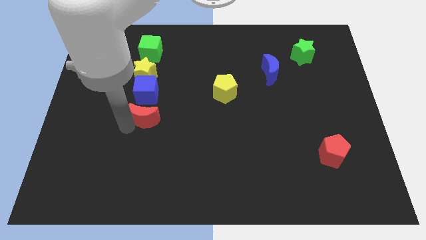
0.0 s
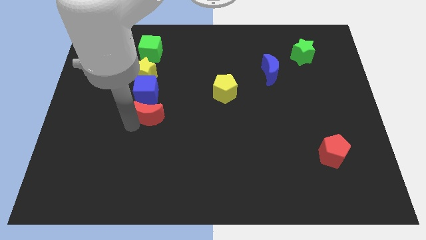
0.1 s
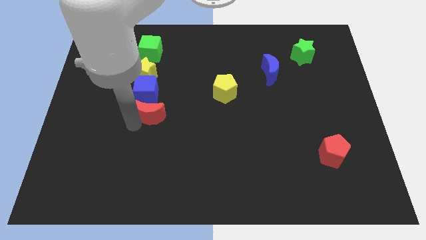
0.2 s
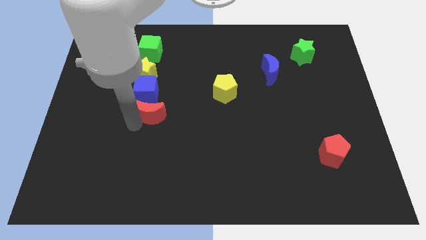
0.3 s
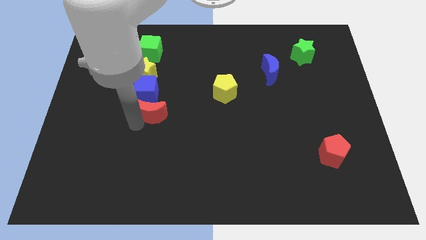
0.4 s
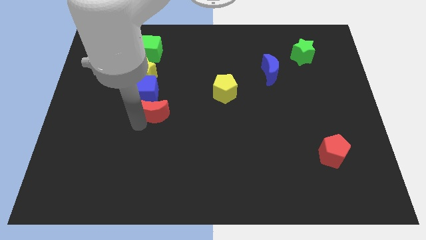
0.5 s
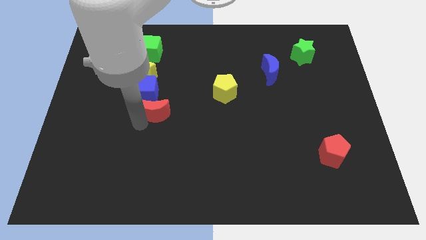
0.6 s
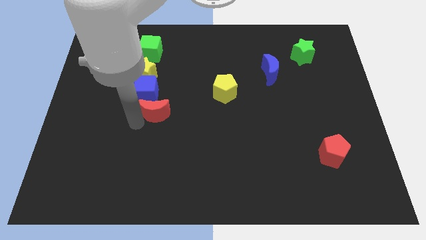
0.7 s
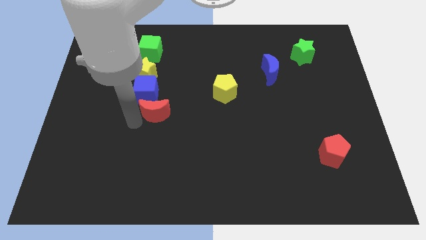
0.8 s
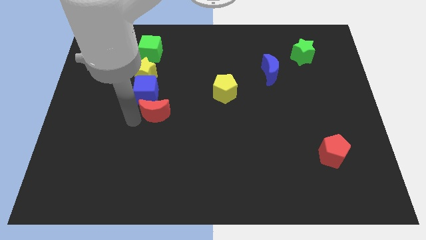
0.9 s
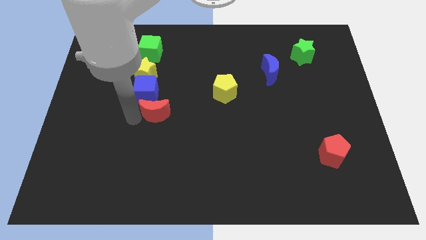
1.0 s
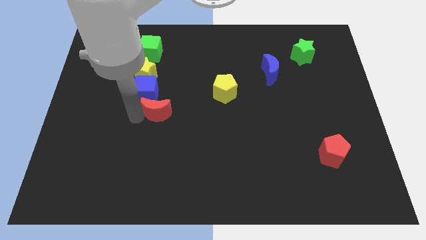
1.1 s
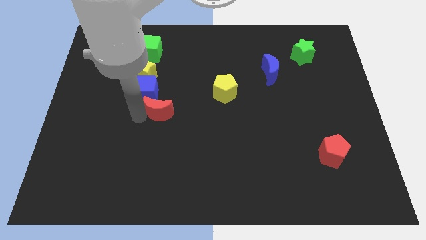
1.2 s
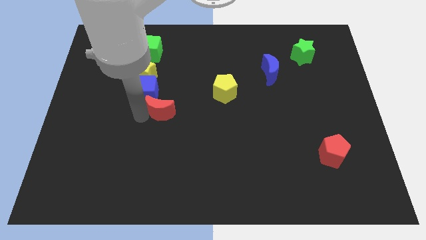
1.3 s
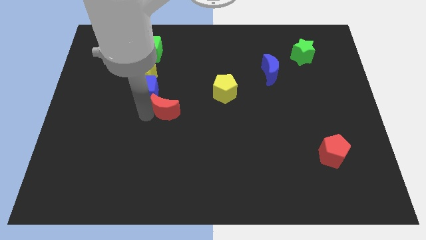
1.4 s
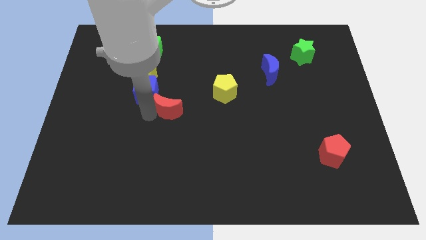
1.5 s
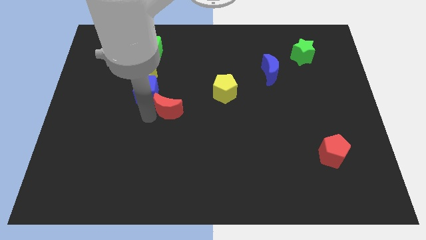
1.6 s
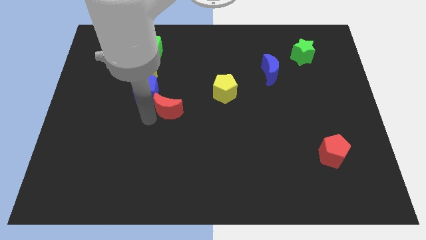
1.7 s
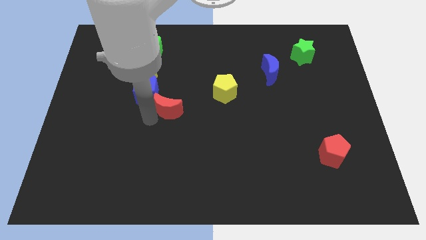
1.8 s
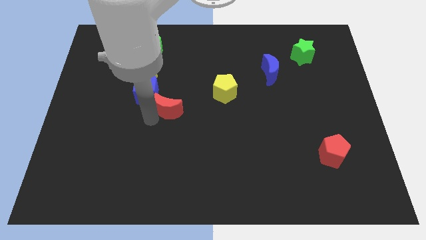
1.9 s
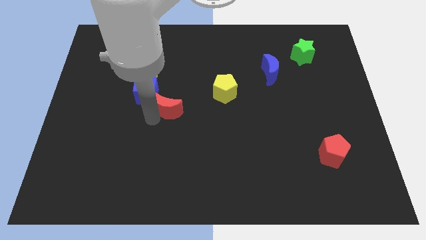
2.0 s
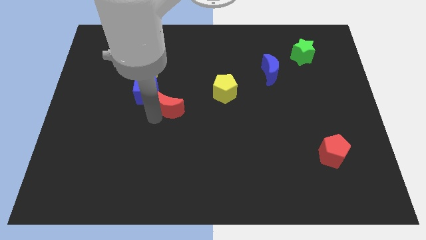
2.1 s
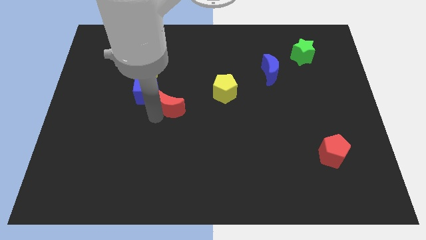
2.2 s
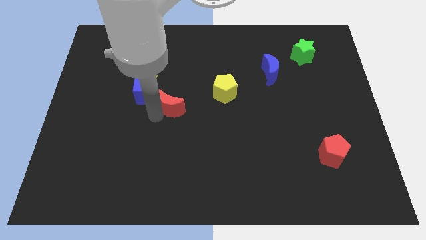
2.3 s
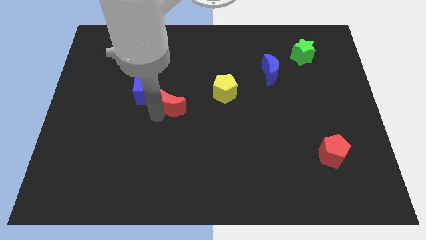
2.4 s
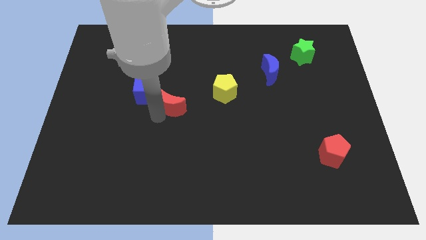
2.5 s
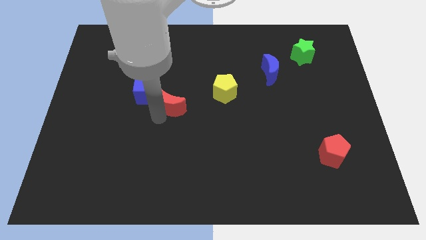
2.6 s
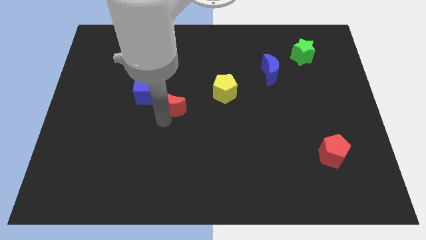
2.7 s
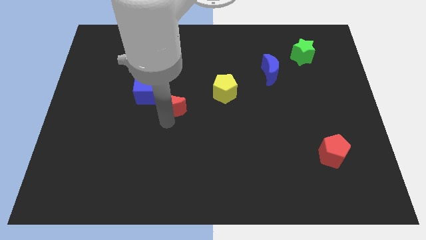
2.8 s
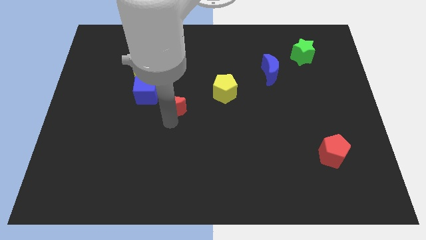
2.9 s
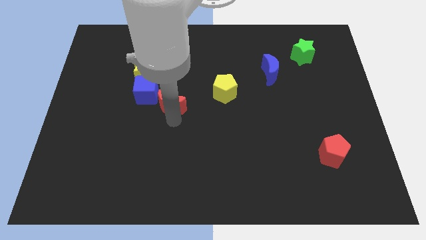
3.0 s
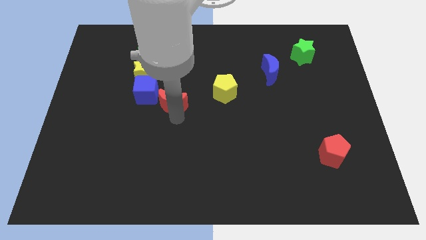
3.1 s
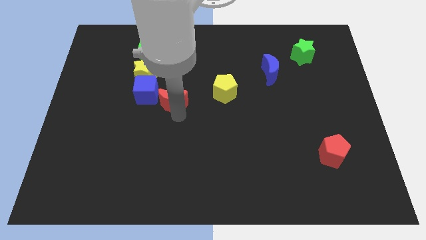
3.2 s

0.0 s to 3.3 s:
move the red crescent to the bottom right of the blue cube

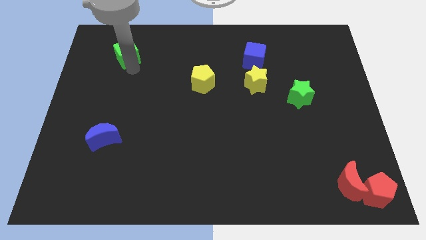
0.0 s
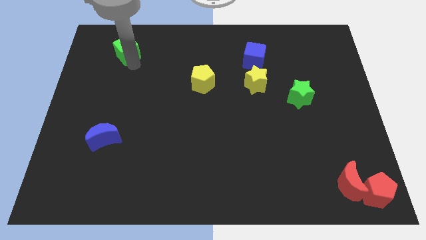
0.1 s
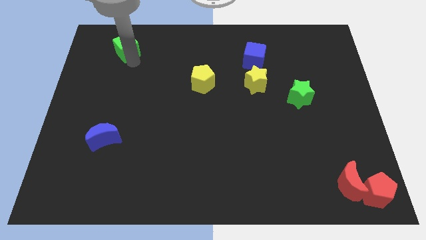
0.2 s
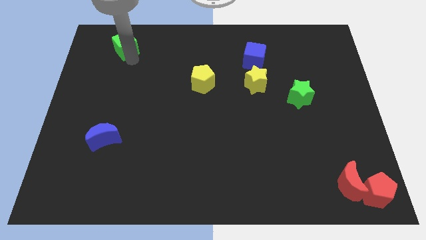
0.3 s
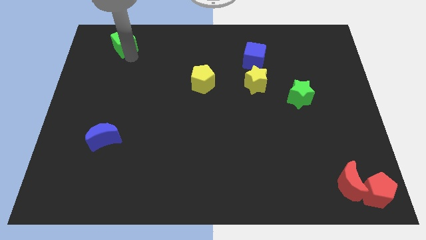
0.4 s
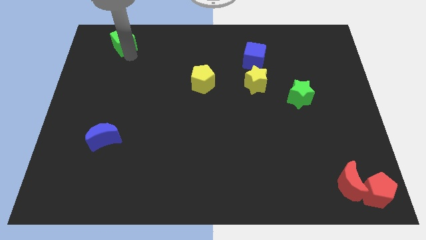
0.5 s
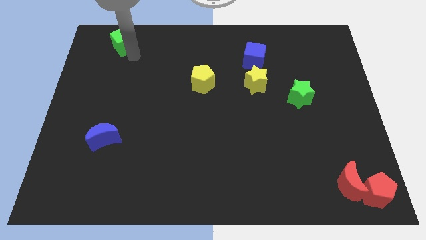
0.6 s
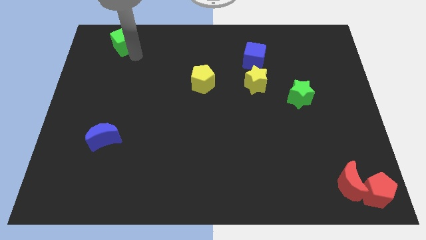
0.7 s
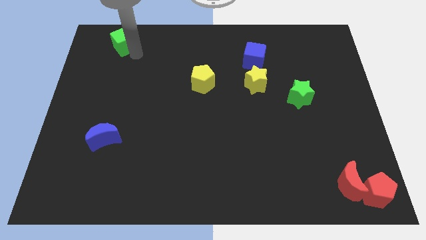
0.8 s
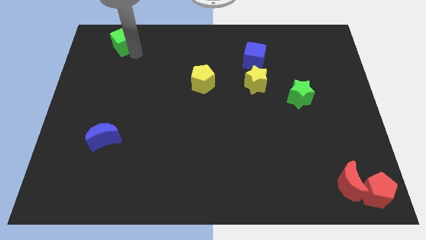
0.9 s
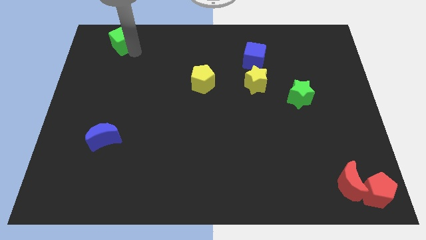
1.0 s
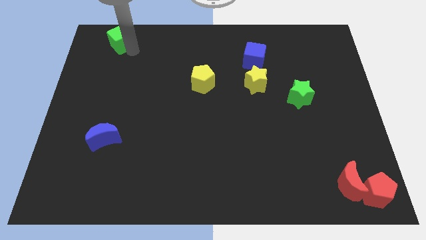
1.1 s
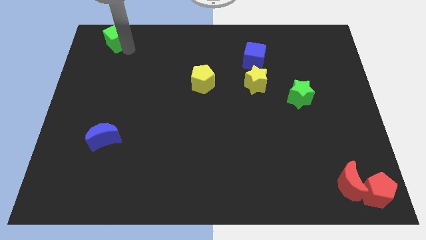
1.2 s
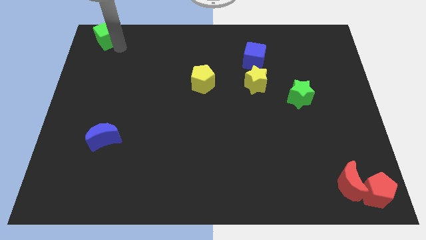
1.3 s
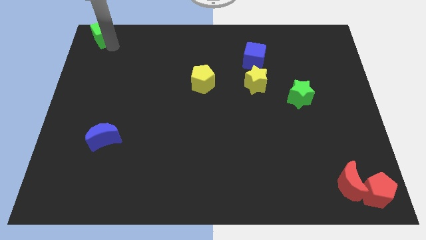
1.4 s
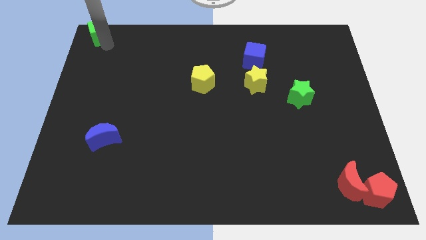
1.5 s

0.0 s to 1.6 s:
move green cube to the top left corner of the board

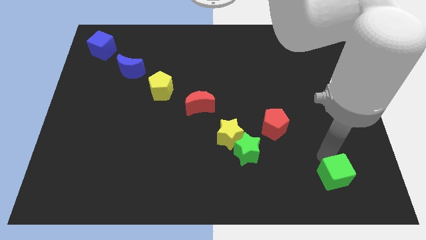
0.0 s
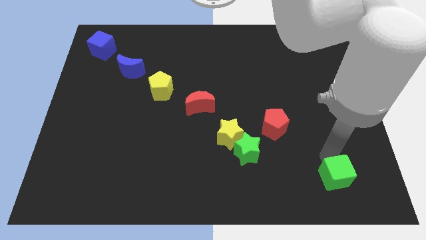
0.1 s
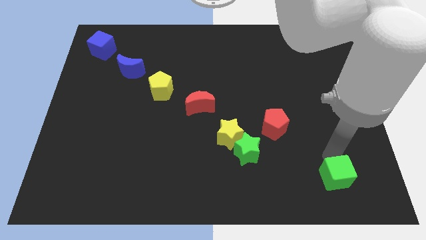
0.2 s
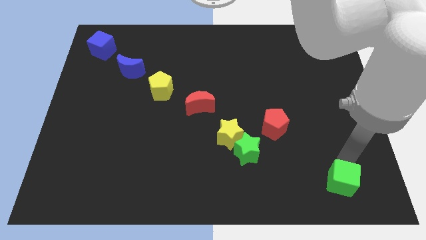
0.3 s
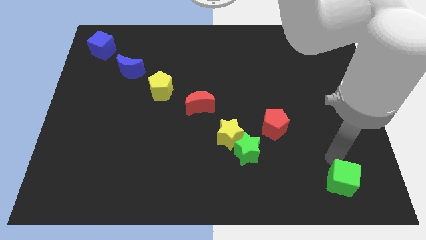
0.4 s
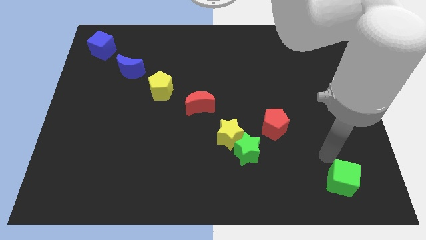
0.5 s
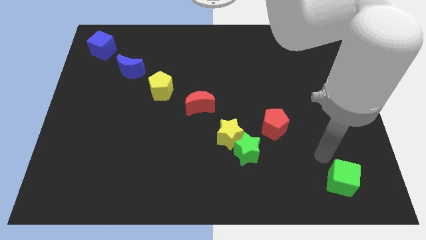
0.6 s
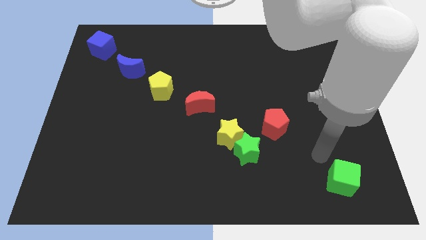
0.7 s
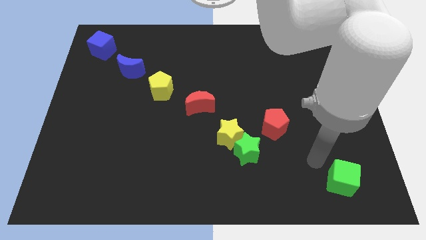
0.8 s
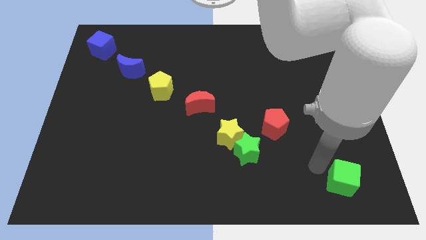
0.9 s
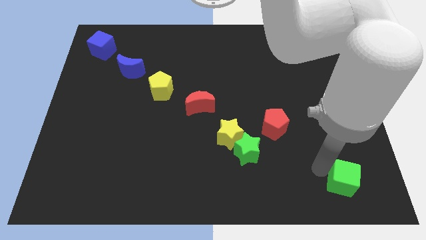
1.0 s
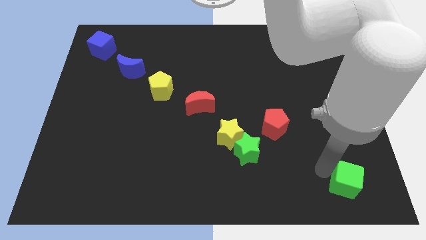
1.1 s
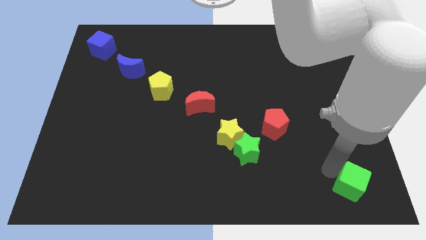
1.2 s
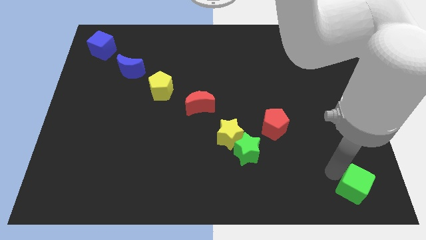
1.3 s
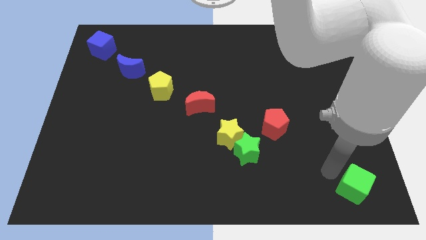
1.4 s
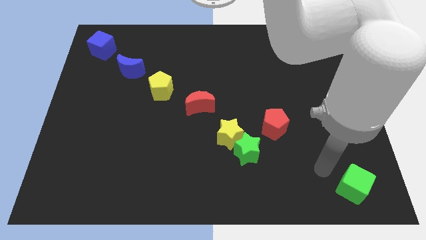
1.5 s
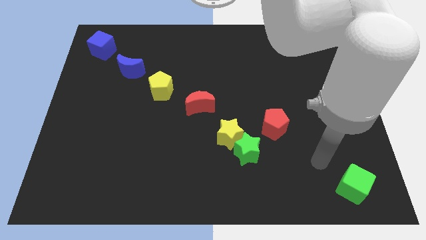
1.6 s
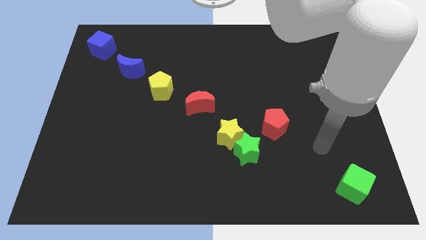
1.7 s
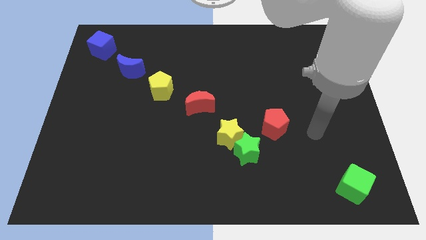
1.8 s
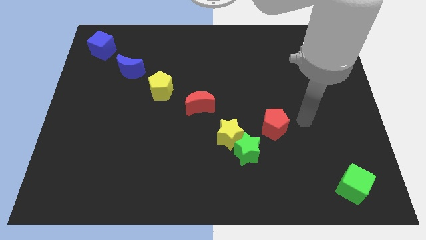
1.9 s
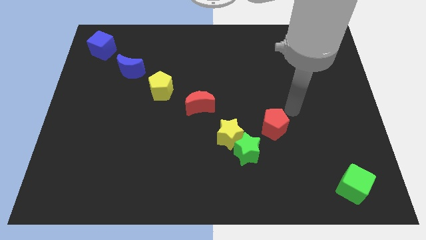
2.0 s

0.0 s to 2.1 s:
push the green cube to the bottom right

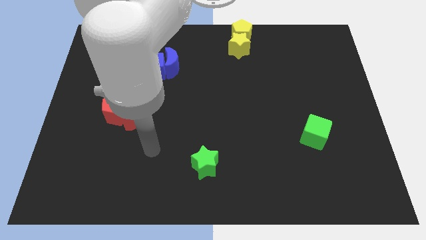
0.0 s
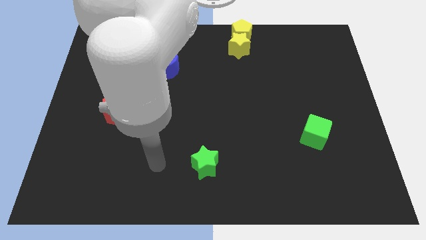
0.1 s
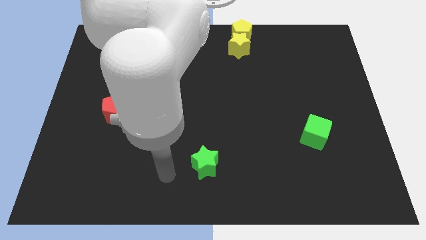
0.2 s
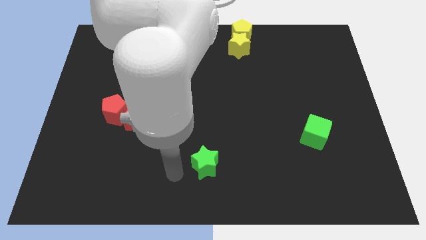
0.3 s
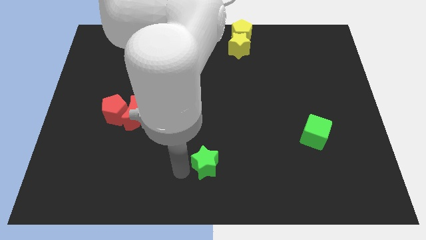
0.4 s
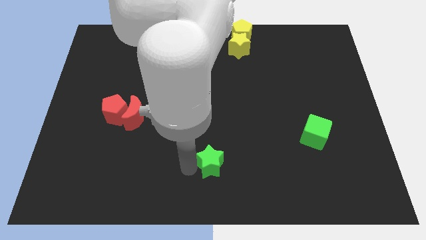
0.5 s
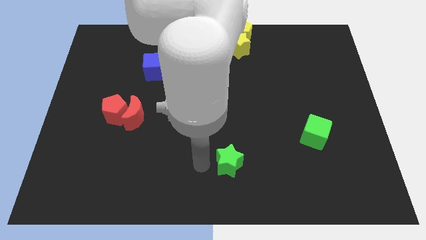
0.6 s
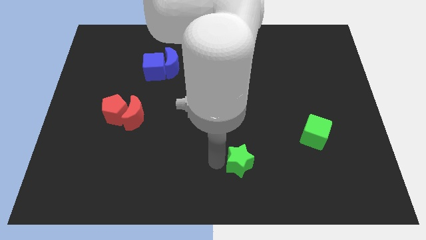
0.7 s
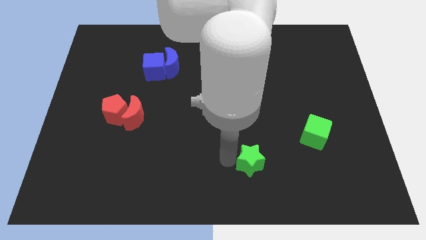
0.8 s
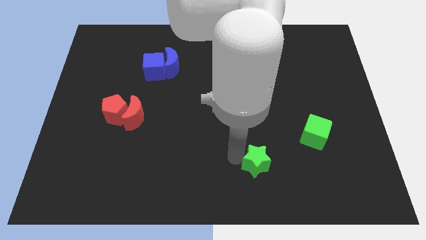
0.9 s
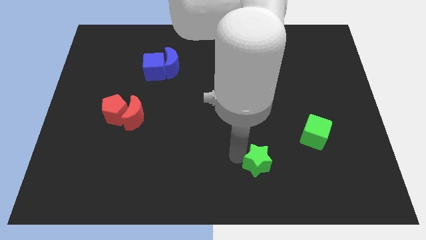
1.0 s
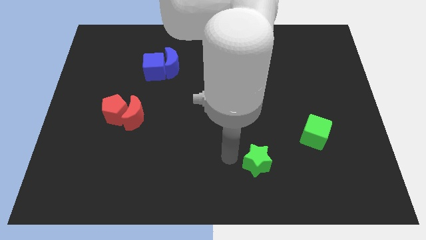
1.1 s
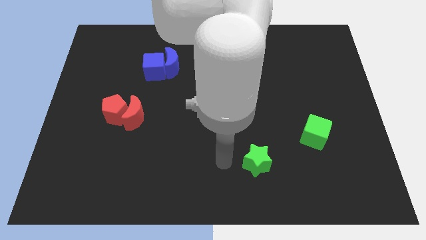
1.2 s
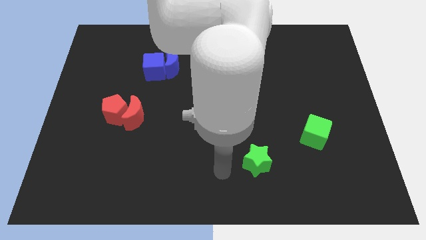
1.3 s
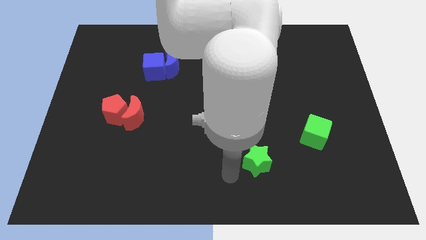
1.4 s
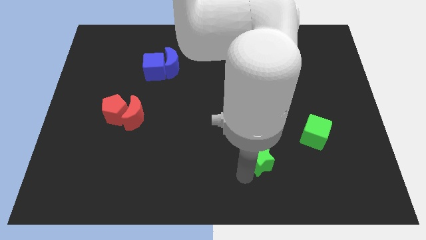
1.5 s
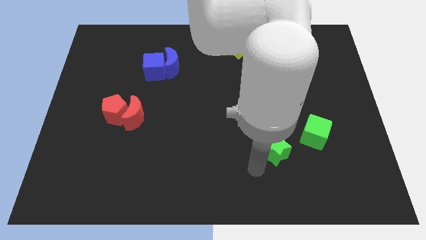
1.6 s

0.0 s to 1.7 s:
move the green star towards the green cube

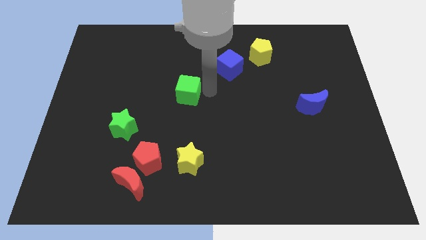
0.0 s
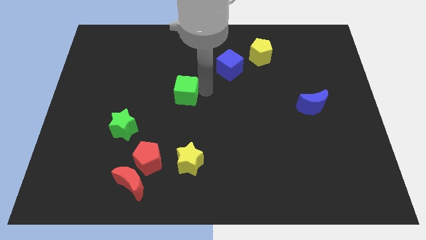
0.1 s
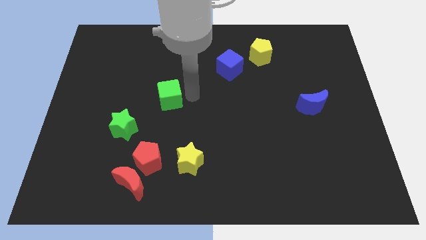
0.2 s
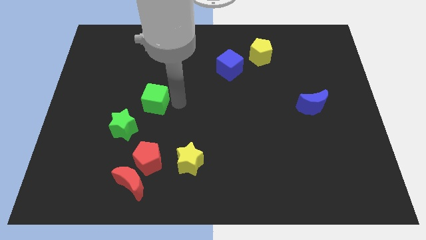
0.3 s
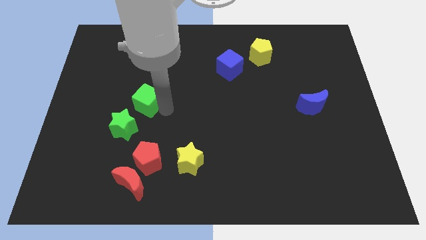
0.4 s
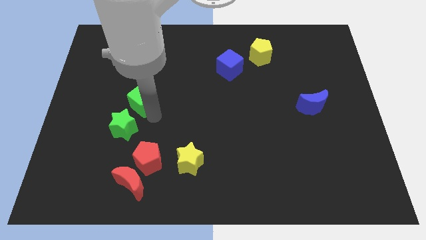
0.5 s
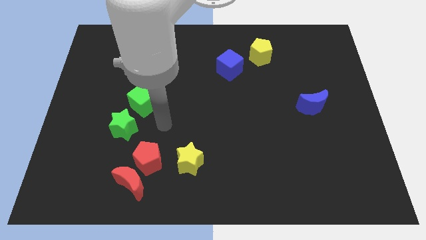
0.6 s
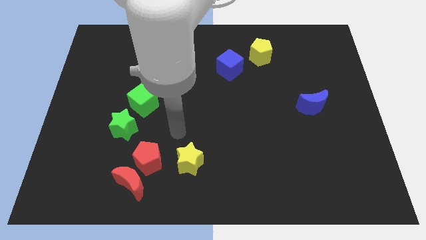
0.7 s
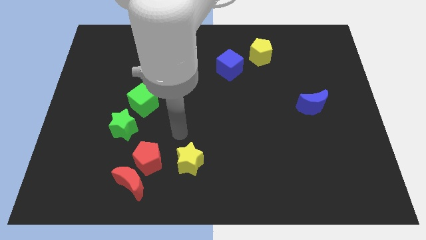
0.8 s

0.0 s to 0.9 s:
push green cube towards green star
